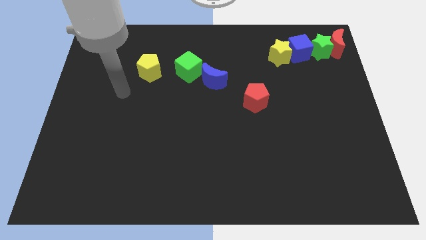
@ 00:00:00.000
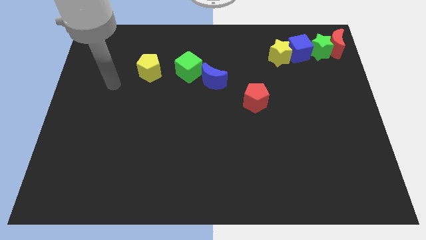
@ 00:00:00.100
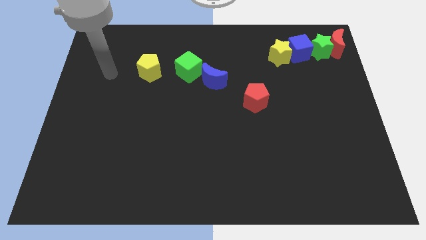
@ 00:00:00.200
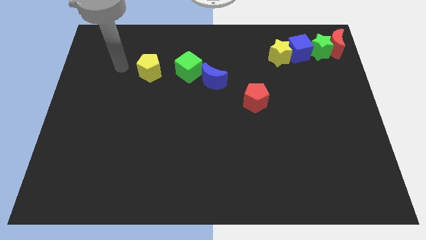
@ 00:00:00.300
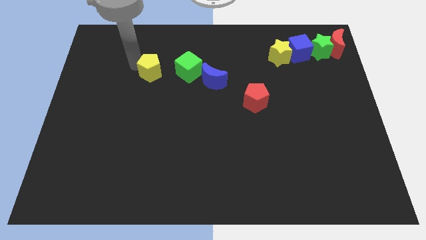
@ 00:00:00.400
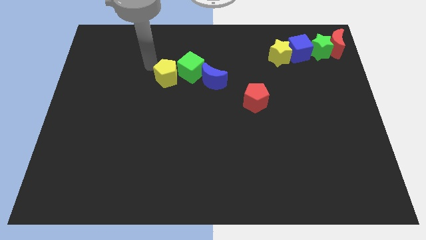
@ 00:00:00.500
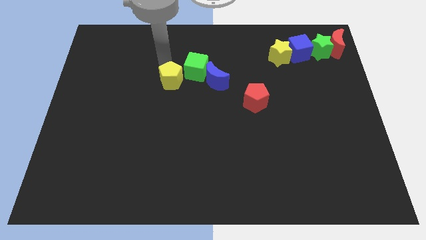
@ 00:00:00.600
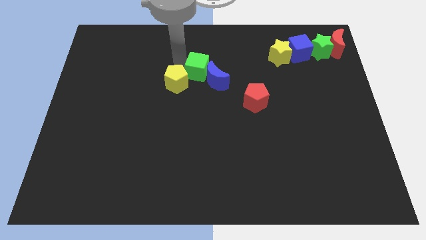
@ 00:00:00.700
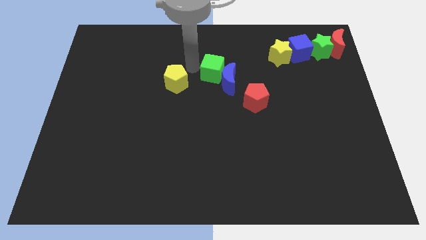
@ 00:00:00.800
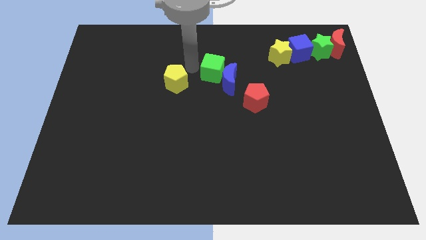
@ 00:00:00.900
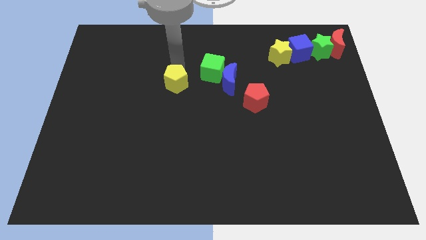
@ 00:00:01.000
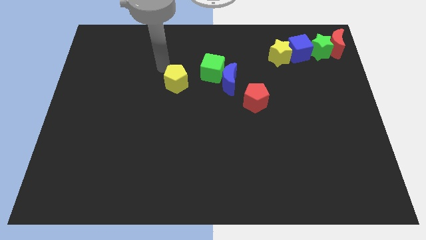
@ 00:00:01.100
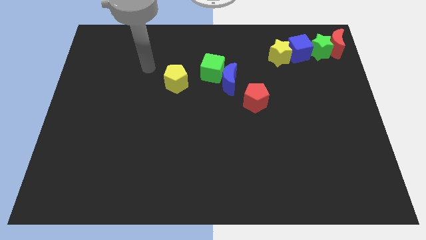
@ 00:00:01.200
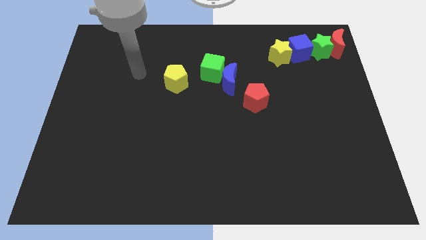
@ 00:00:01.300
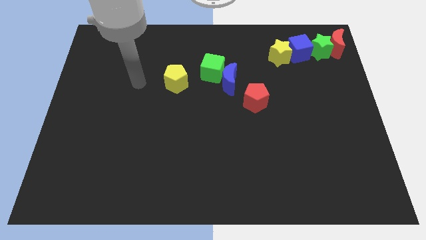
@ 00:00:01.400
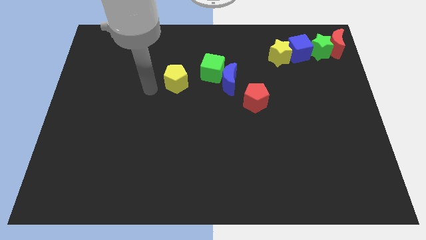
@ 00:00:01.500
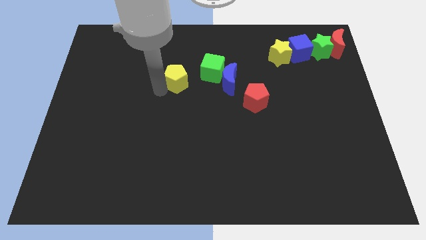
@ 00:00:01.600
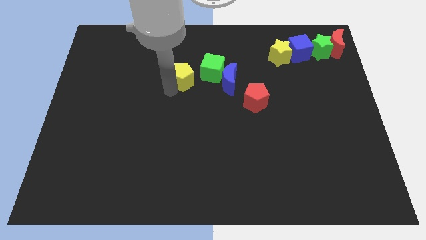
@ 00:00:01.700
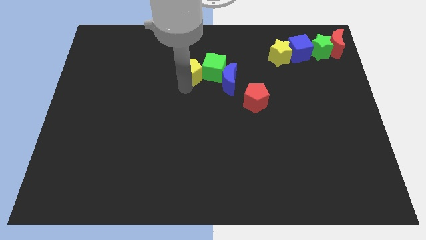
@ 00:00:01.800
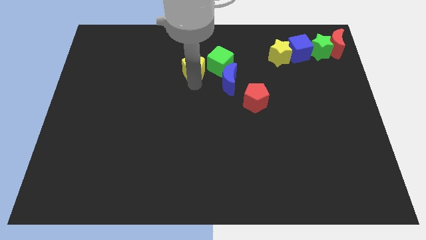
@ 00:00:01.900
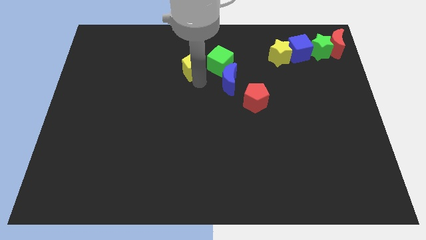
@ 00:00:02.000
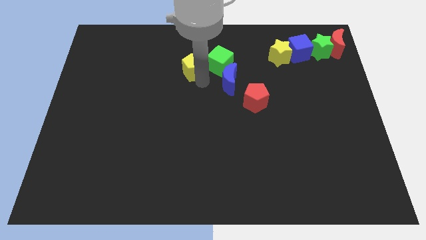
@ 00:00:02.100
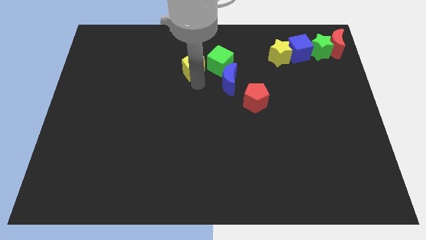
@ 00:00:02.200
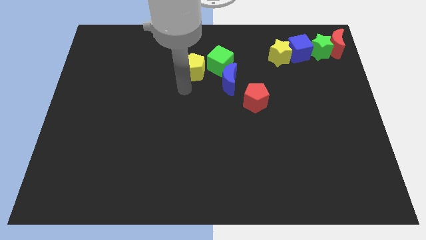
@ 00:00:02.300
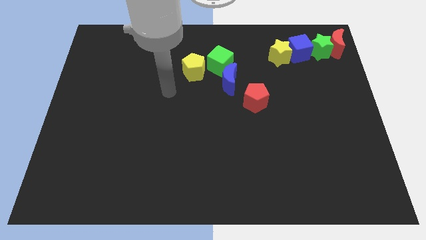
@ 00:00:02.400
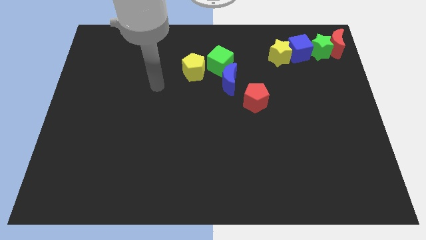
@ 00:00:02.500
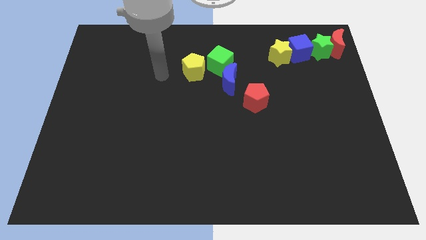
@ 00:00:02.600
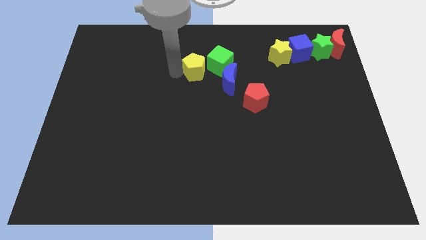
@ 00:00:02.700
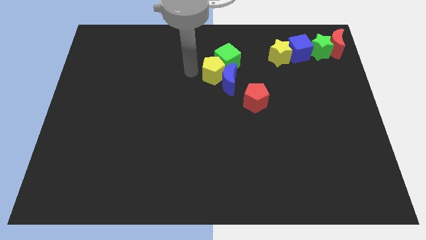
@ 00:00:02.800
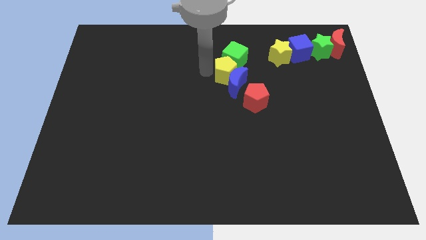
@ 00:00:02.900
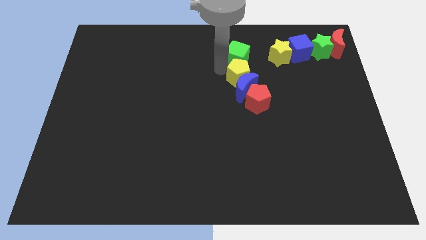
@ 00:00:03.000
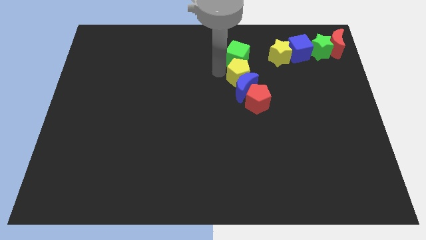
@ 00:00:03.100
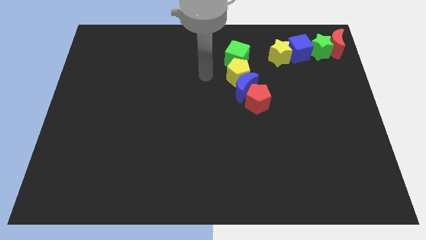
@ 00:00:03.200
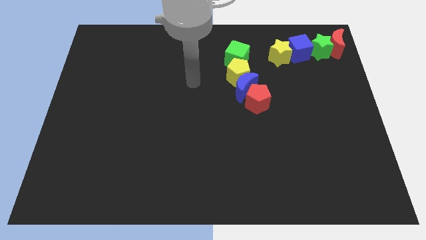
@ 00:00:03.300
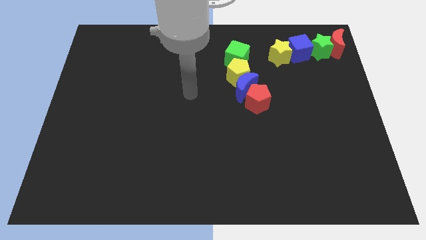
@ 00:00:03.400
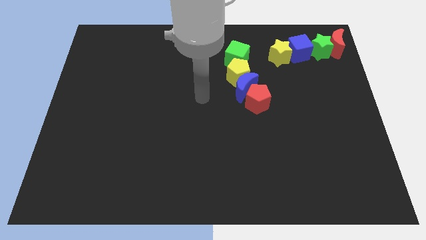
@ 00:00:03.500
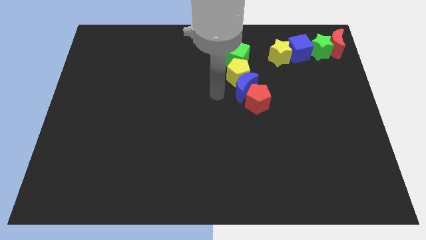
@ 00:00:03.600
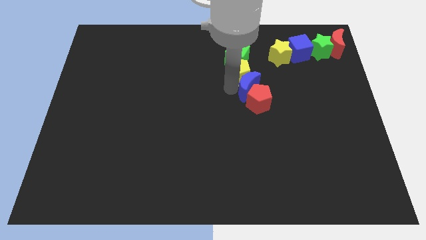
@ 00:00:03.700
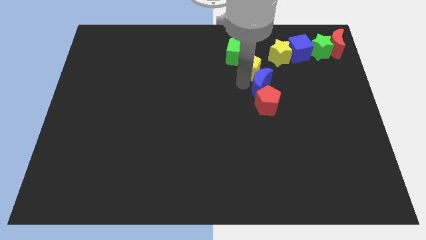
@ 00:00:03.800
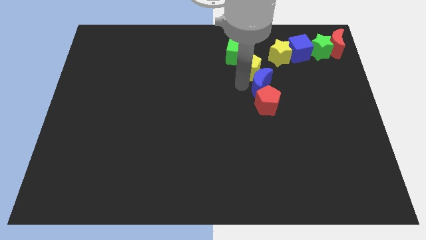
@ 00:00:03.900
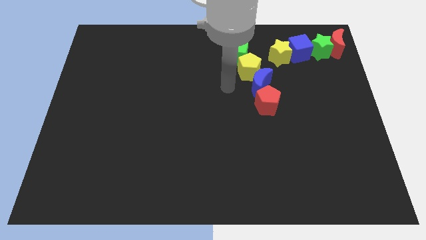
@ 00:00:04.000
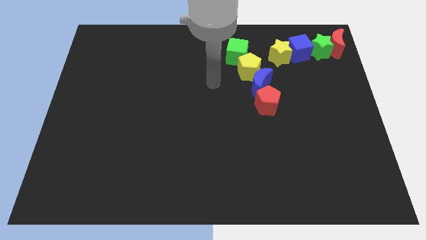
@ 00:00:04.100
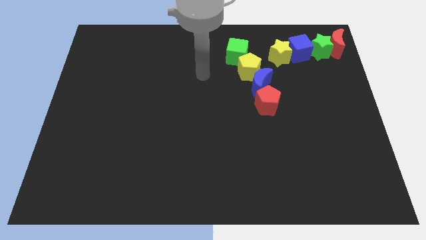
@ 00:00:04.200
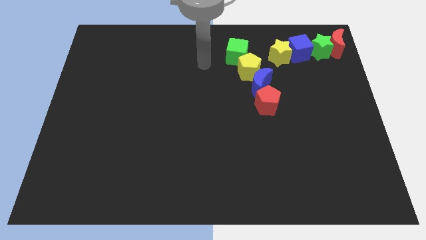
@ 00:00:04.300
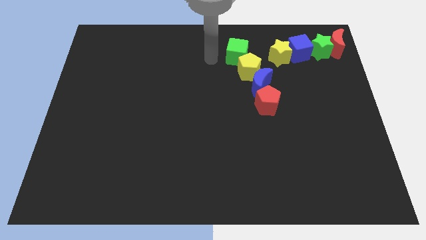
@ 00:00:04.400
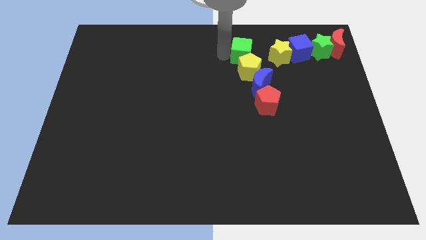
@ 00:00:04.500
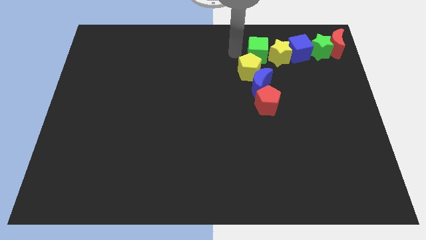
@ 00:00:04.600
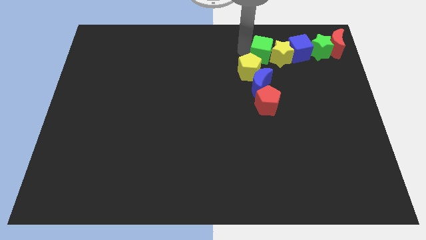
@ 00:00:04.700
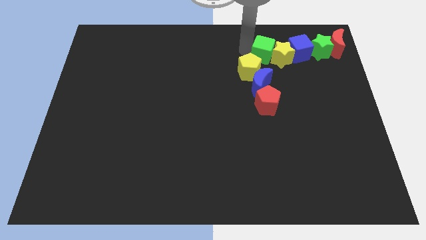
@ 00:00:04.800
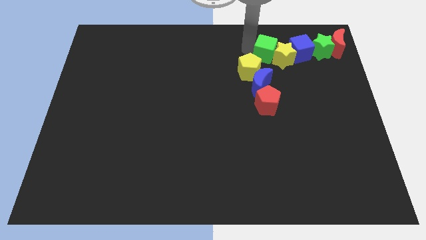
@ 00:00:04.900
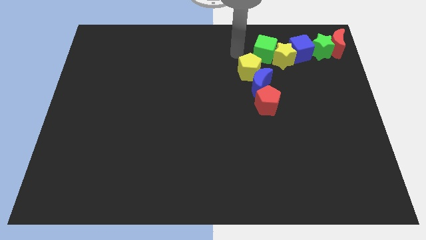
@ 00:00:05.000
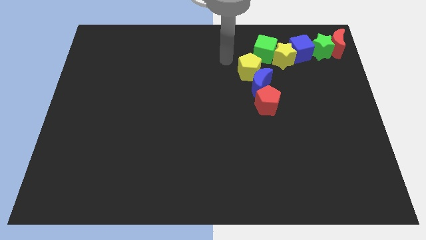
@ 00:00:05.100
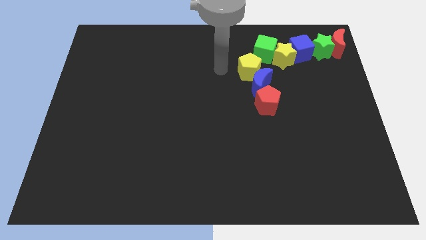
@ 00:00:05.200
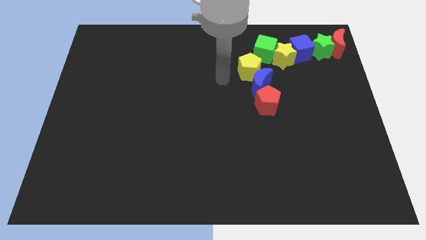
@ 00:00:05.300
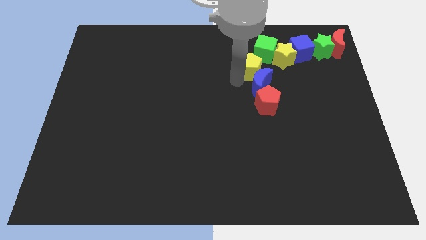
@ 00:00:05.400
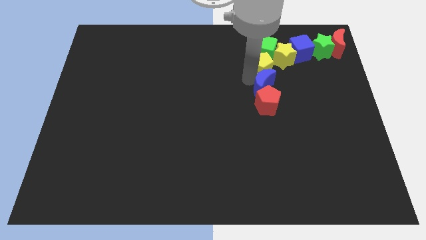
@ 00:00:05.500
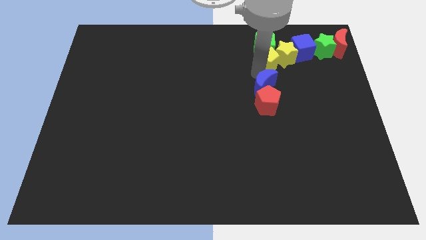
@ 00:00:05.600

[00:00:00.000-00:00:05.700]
move the group of blocks to the top right of the board

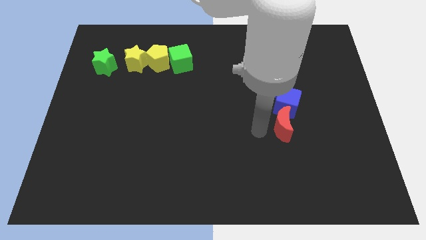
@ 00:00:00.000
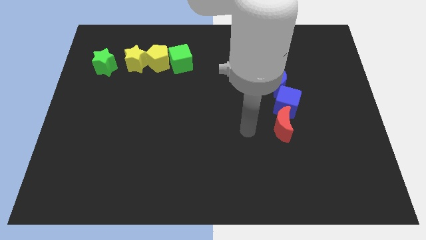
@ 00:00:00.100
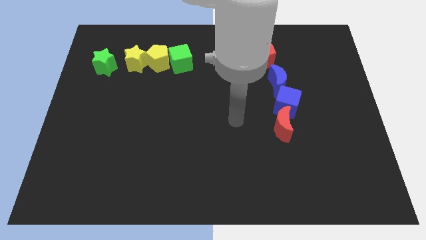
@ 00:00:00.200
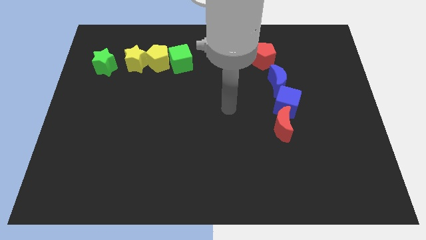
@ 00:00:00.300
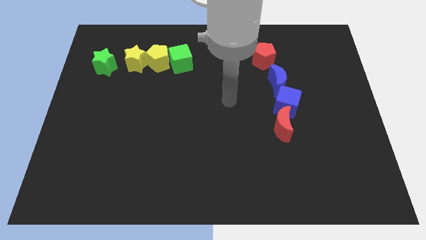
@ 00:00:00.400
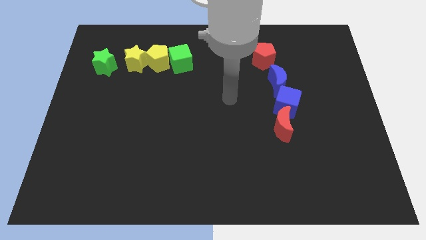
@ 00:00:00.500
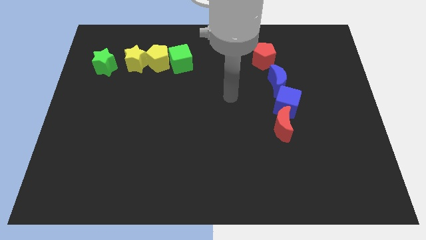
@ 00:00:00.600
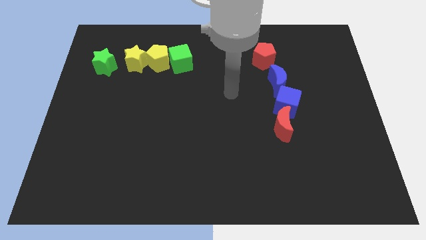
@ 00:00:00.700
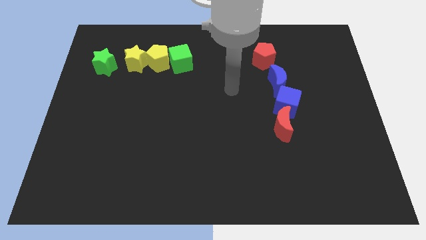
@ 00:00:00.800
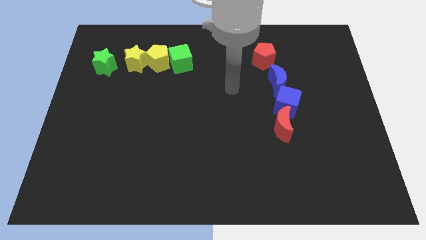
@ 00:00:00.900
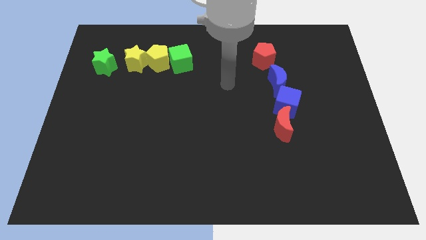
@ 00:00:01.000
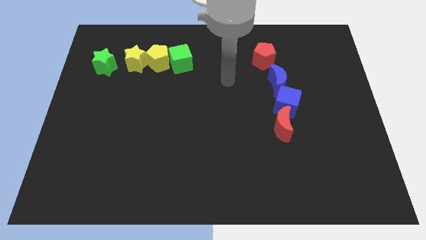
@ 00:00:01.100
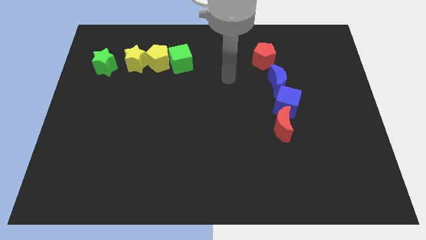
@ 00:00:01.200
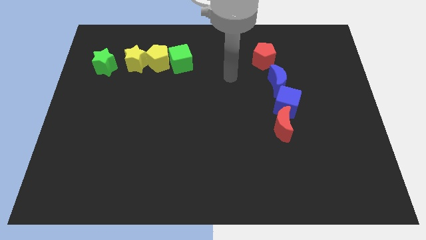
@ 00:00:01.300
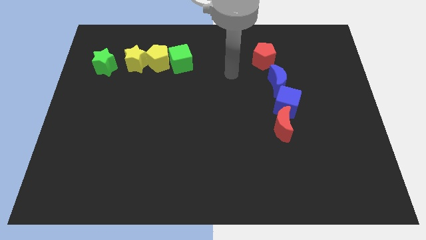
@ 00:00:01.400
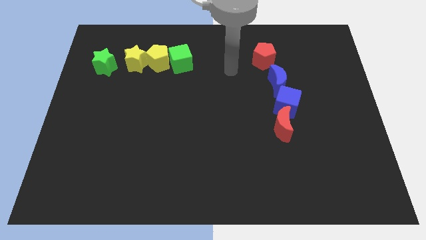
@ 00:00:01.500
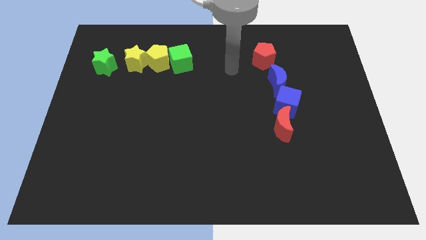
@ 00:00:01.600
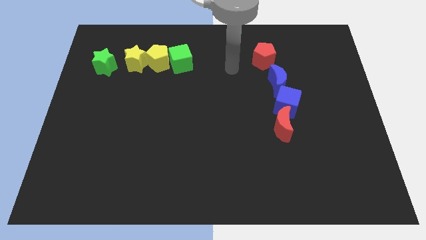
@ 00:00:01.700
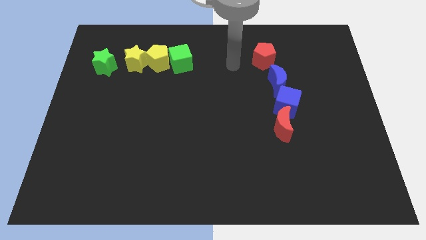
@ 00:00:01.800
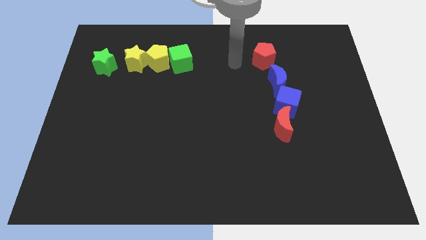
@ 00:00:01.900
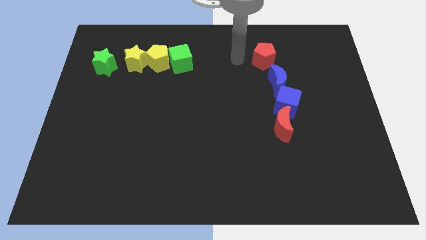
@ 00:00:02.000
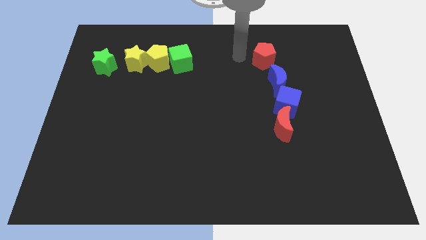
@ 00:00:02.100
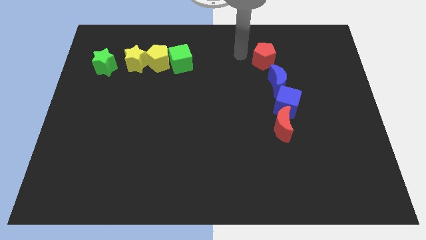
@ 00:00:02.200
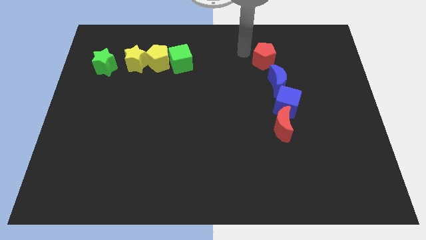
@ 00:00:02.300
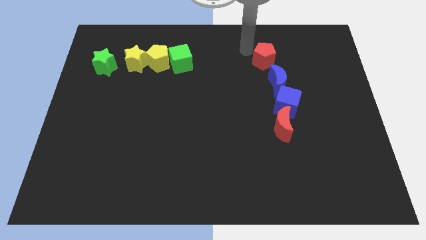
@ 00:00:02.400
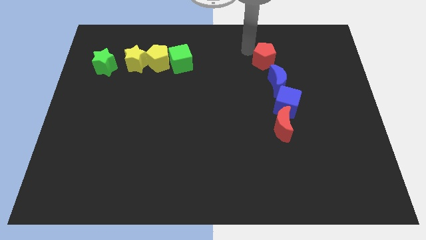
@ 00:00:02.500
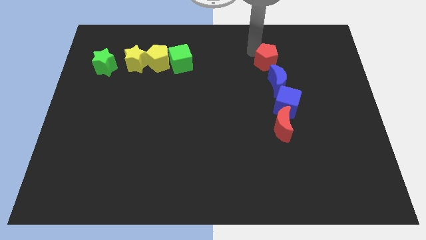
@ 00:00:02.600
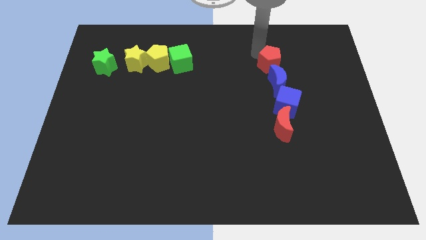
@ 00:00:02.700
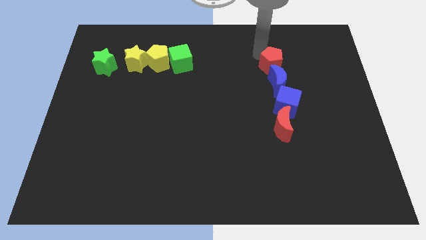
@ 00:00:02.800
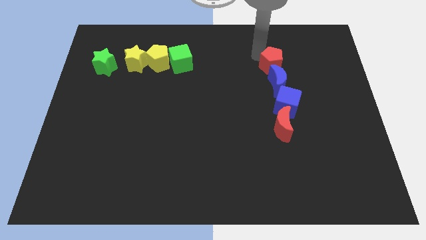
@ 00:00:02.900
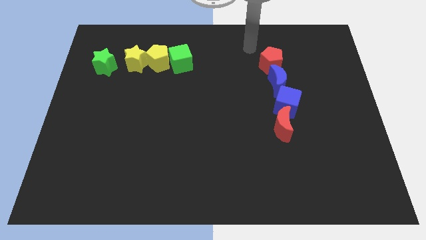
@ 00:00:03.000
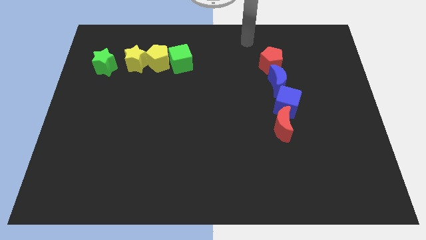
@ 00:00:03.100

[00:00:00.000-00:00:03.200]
move the red pentagon slightly to the bottom
